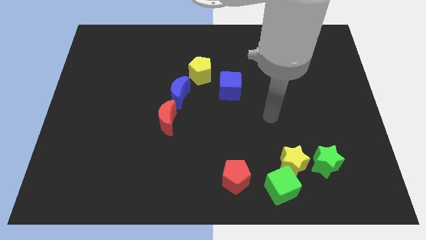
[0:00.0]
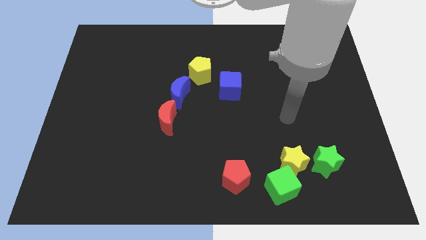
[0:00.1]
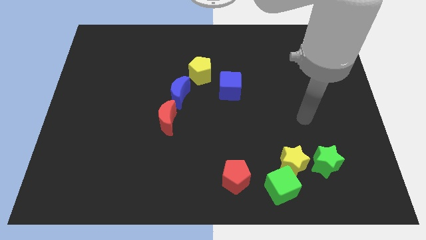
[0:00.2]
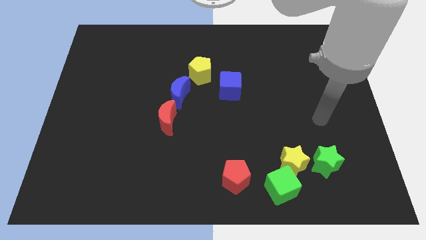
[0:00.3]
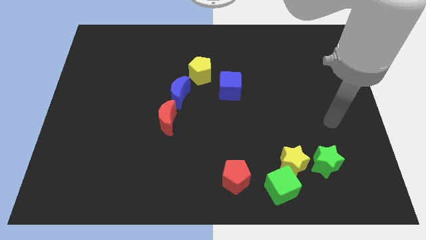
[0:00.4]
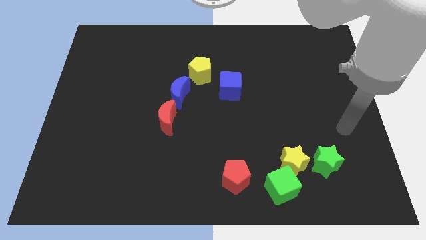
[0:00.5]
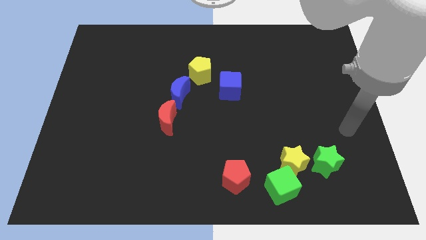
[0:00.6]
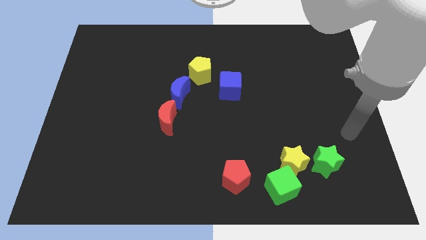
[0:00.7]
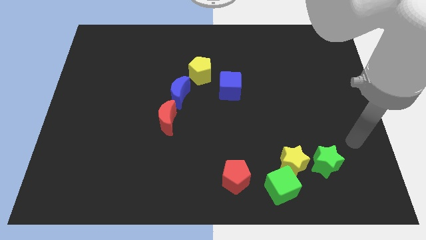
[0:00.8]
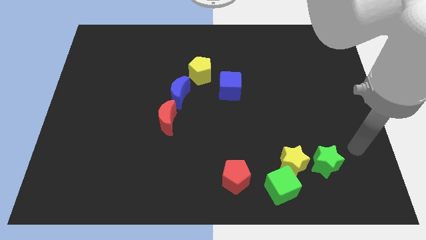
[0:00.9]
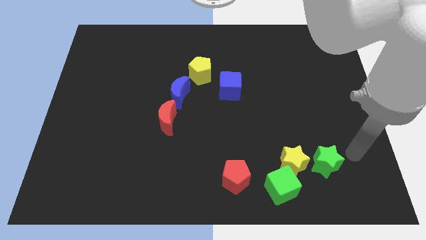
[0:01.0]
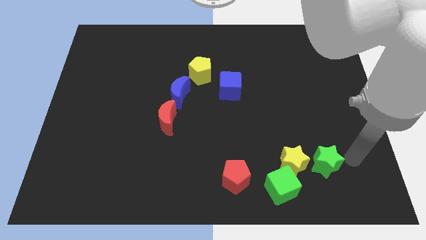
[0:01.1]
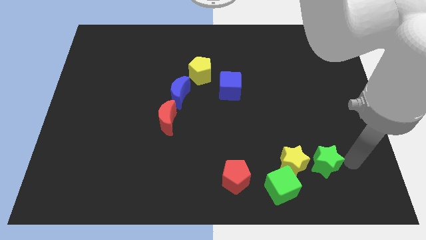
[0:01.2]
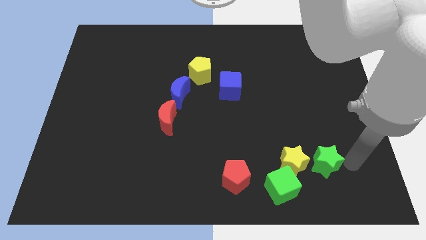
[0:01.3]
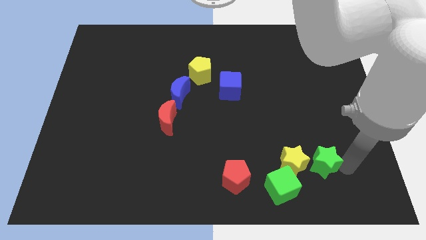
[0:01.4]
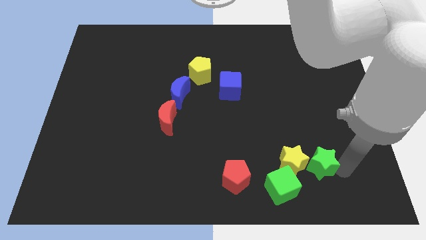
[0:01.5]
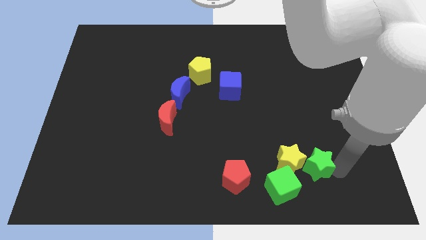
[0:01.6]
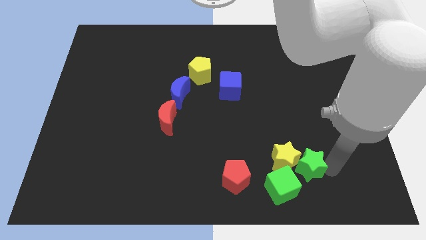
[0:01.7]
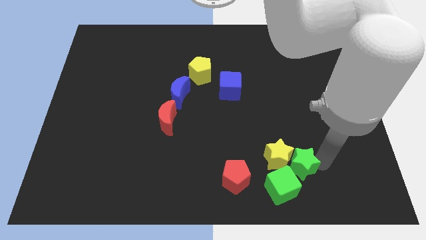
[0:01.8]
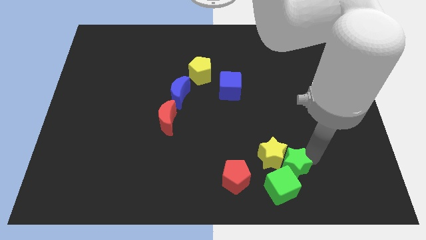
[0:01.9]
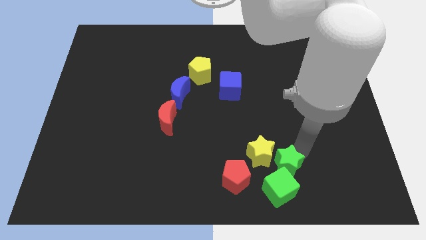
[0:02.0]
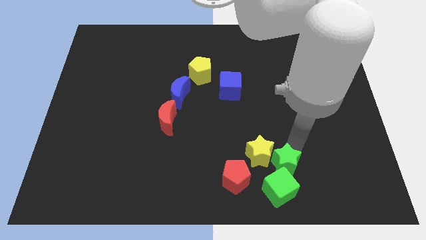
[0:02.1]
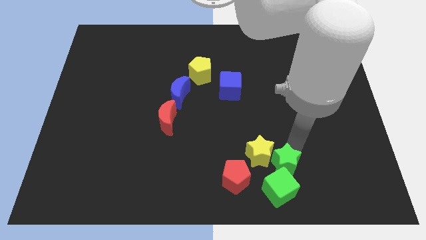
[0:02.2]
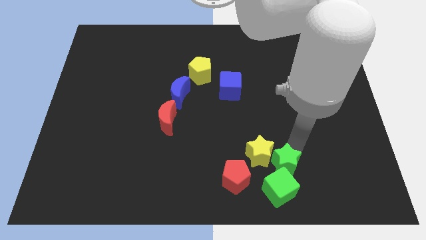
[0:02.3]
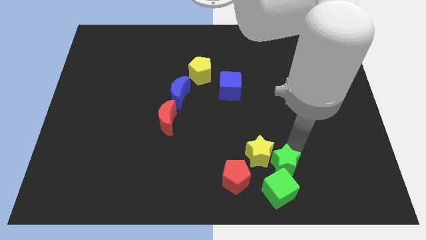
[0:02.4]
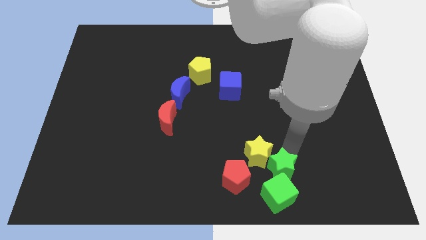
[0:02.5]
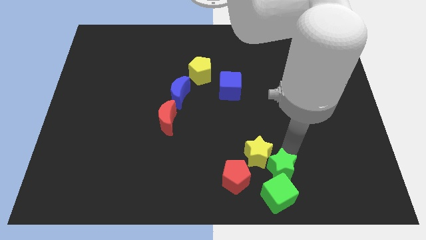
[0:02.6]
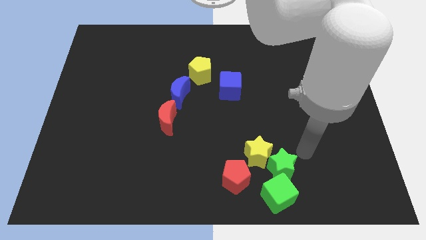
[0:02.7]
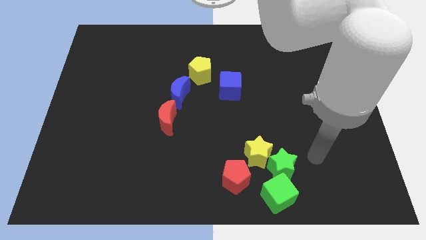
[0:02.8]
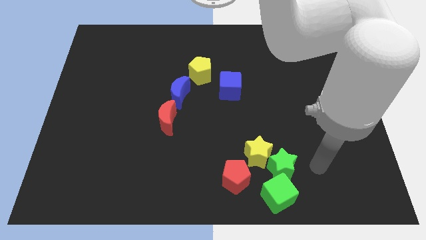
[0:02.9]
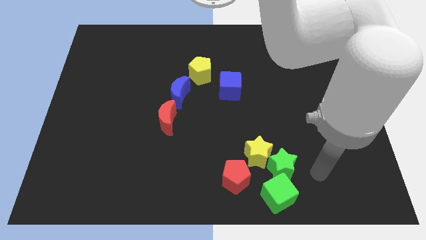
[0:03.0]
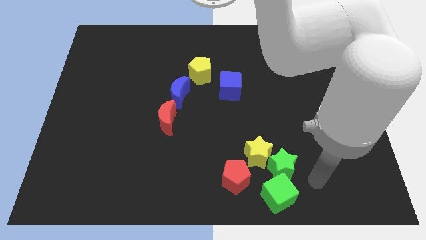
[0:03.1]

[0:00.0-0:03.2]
move the stars to the right of the board

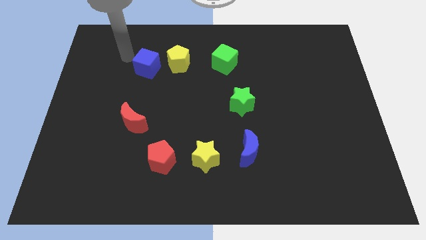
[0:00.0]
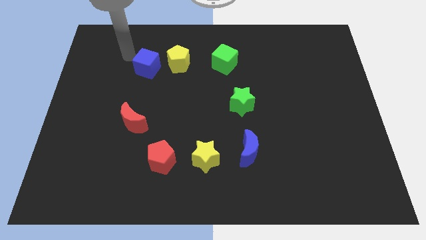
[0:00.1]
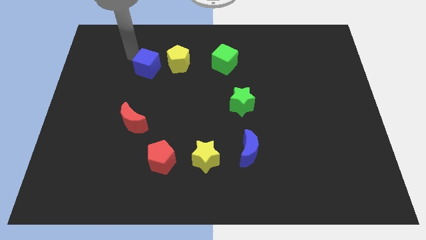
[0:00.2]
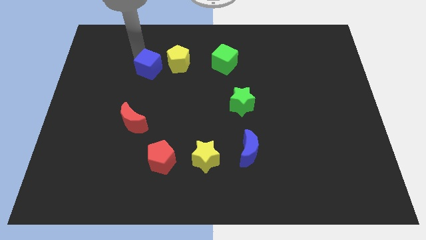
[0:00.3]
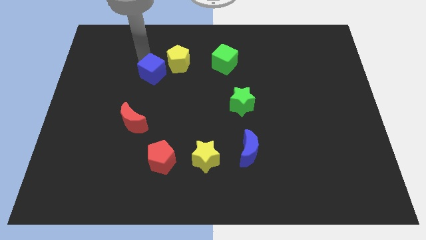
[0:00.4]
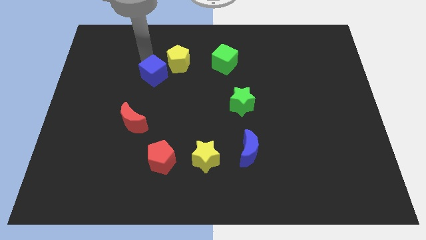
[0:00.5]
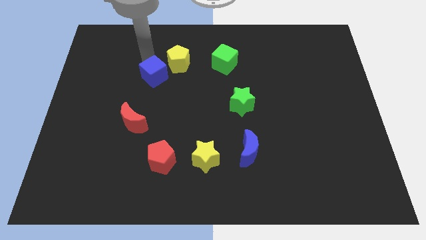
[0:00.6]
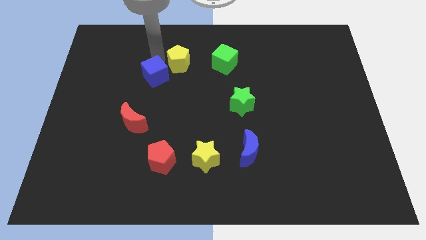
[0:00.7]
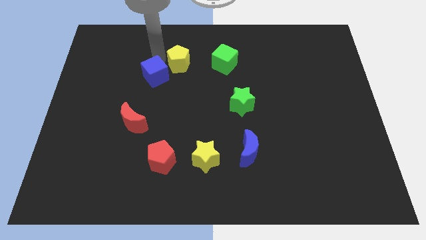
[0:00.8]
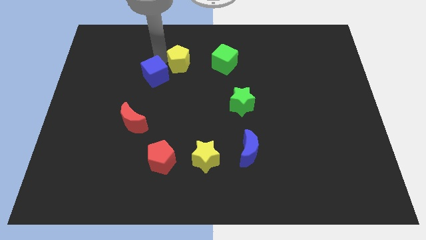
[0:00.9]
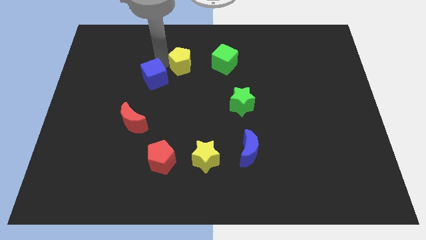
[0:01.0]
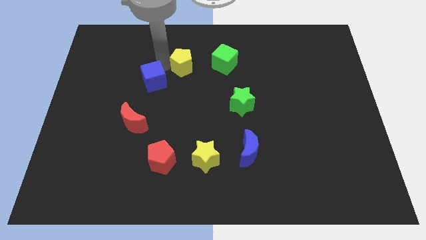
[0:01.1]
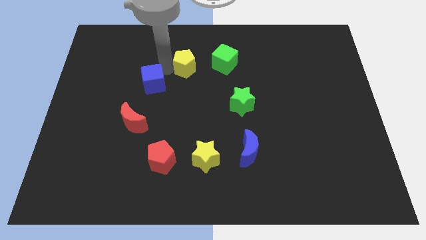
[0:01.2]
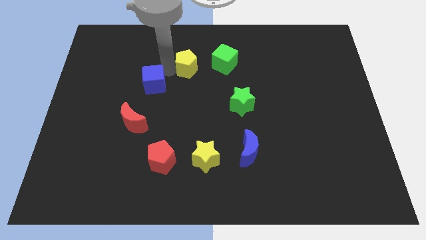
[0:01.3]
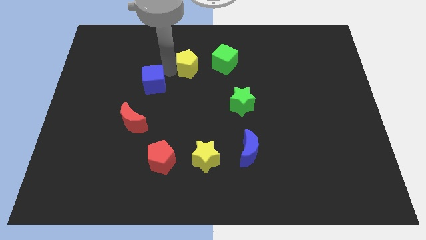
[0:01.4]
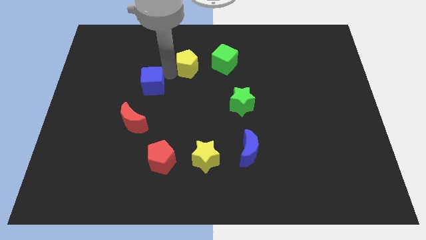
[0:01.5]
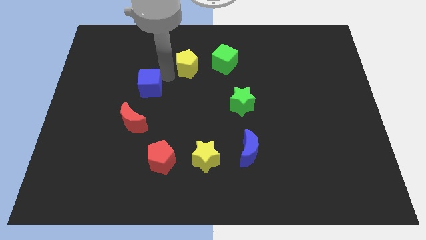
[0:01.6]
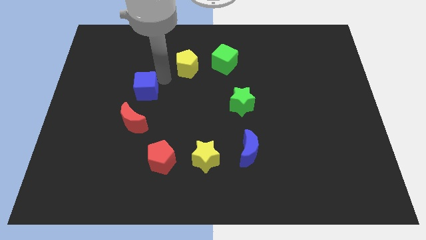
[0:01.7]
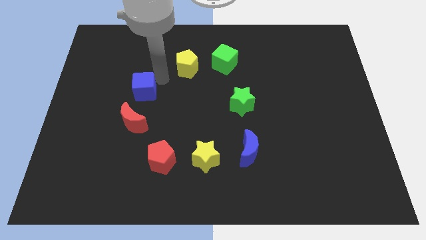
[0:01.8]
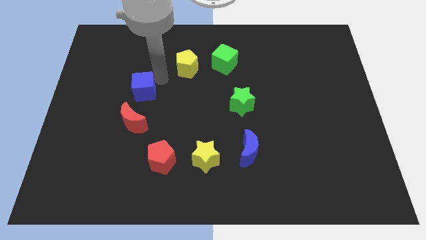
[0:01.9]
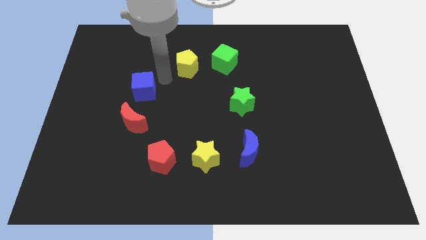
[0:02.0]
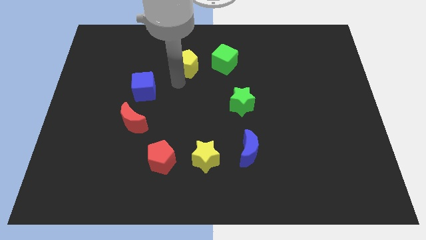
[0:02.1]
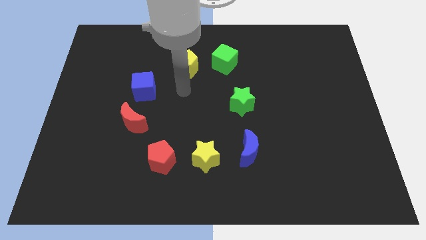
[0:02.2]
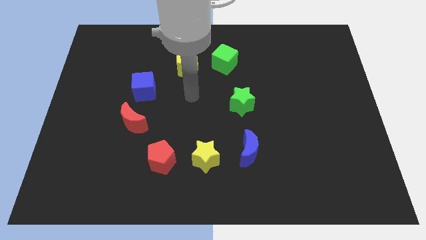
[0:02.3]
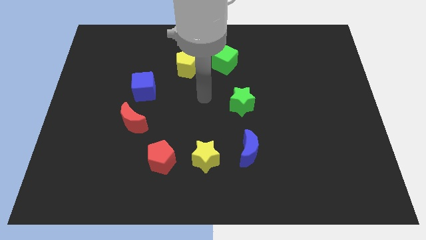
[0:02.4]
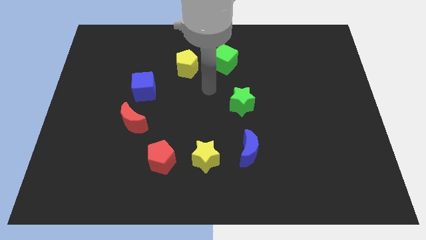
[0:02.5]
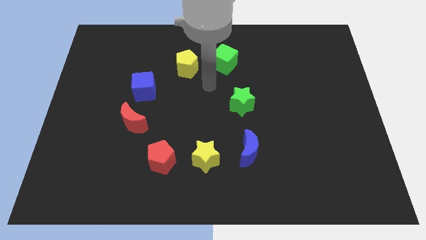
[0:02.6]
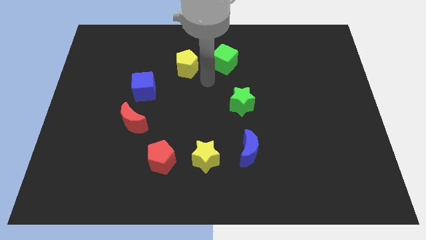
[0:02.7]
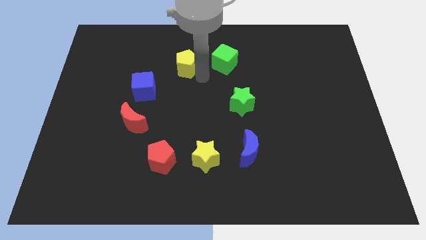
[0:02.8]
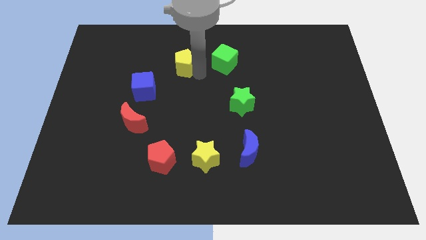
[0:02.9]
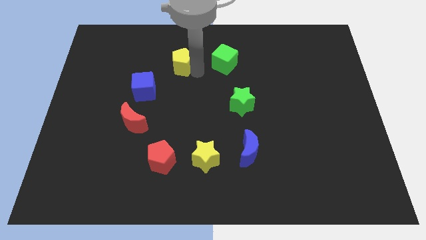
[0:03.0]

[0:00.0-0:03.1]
separate the blue cube from the yellow pentagon

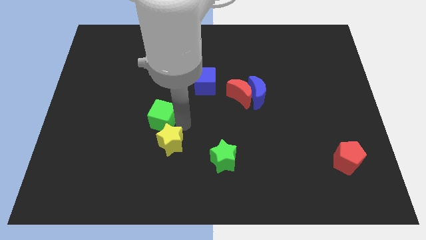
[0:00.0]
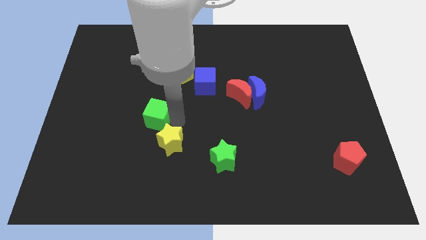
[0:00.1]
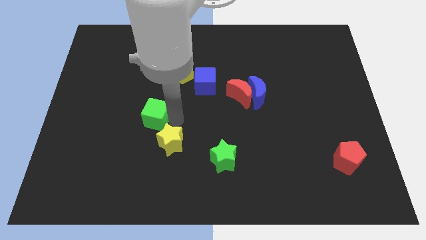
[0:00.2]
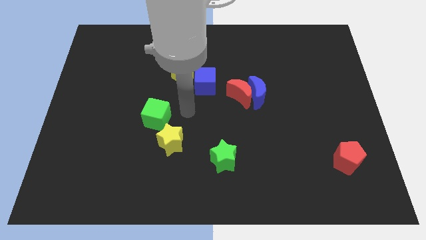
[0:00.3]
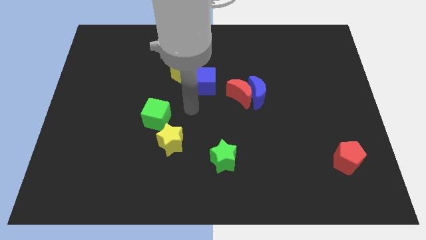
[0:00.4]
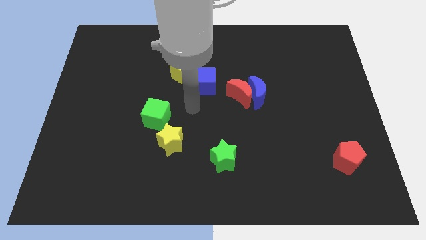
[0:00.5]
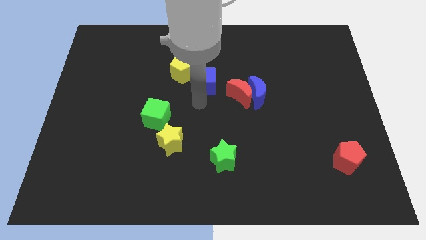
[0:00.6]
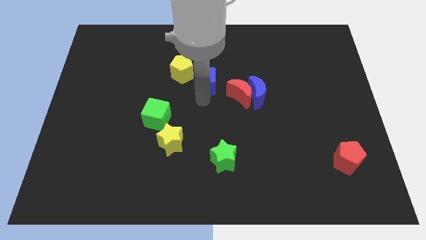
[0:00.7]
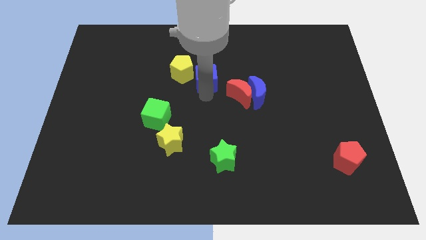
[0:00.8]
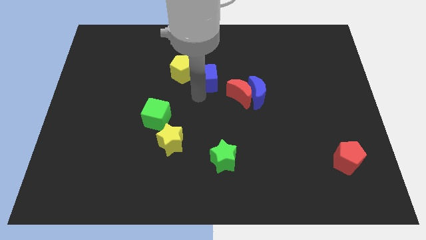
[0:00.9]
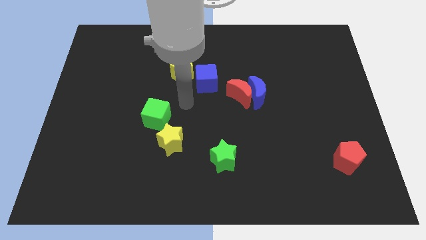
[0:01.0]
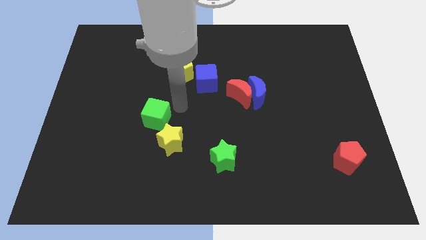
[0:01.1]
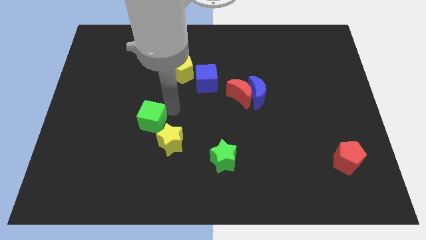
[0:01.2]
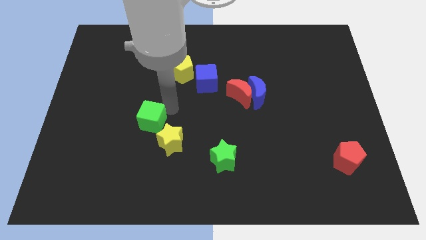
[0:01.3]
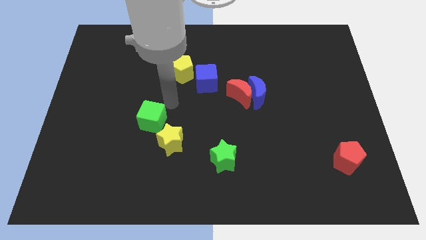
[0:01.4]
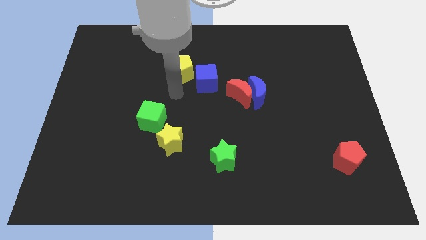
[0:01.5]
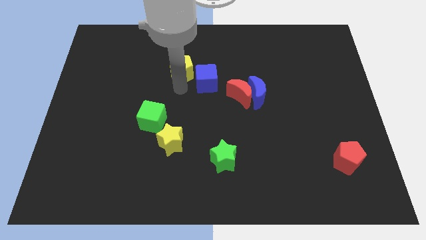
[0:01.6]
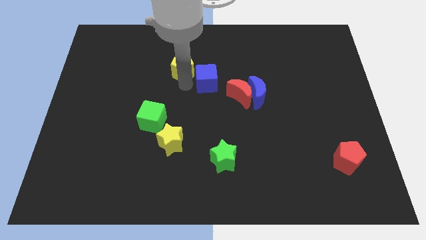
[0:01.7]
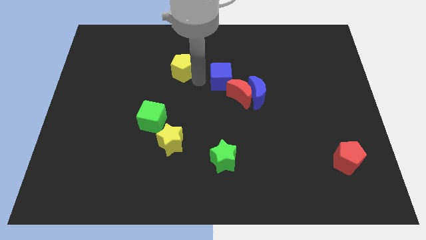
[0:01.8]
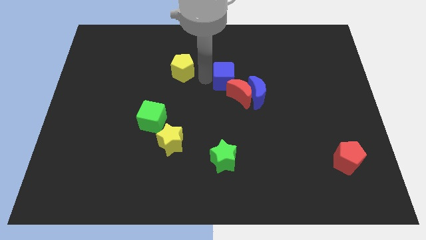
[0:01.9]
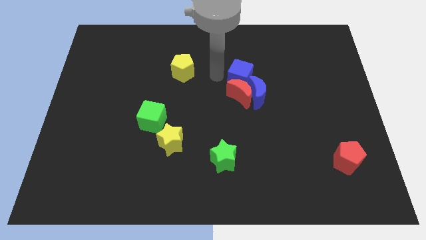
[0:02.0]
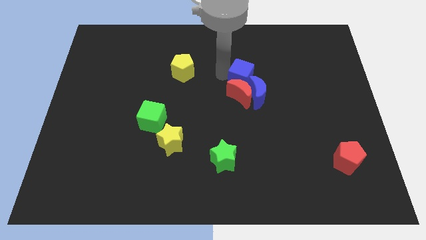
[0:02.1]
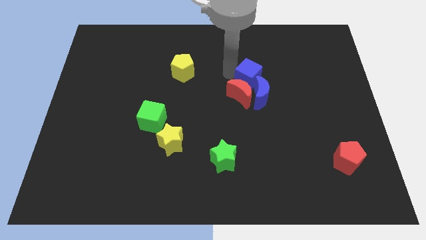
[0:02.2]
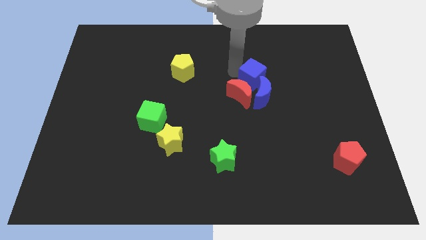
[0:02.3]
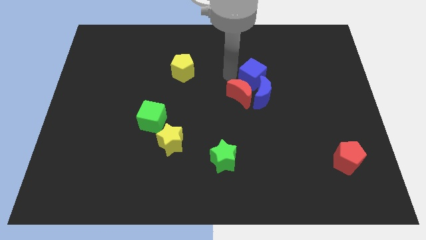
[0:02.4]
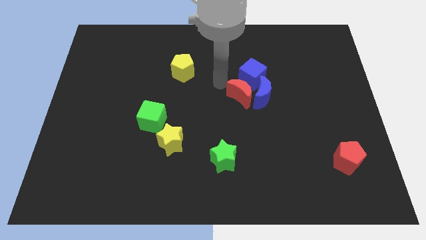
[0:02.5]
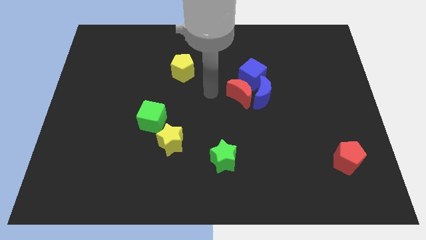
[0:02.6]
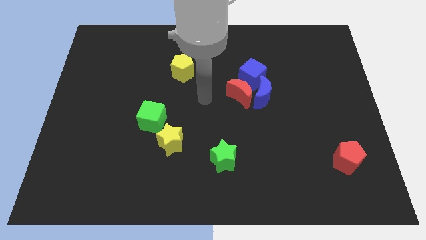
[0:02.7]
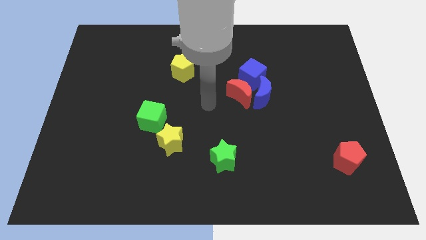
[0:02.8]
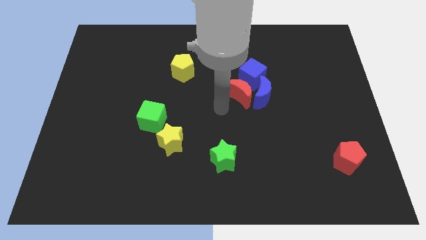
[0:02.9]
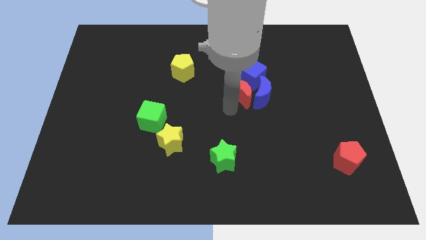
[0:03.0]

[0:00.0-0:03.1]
push the blue cube away from the green cube
